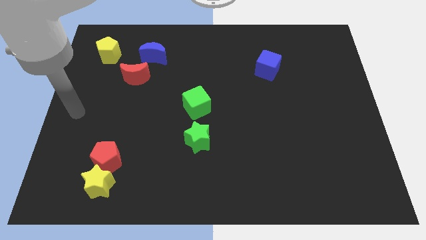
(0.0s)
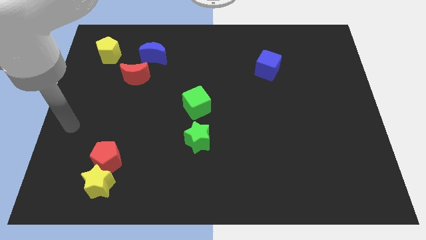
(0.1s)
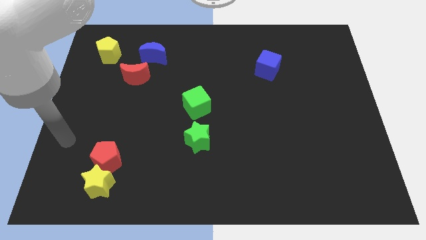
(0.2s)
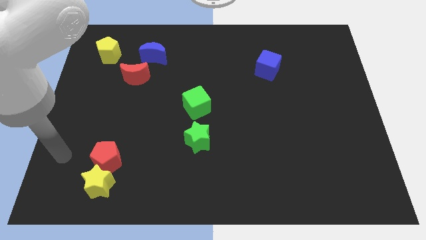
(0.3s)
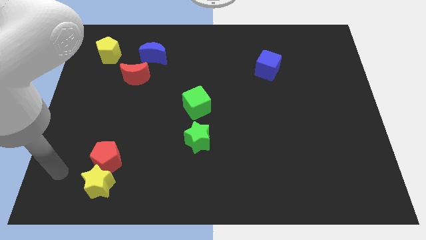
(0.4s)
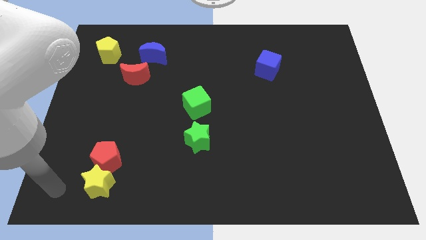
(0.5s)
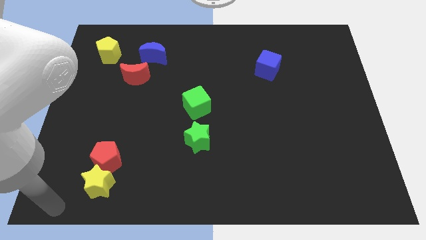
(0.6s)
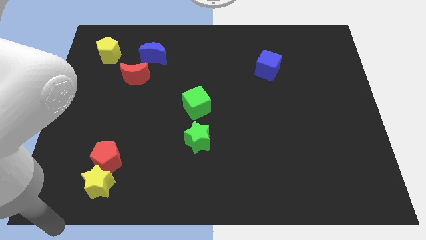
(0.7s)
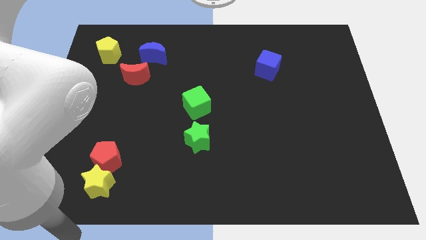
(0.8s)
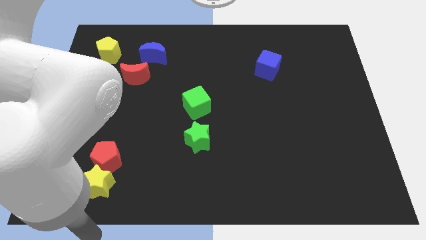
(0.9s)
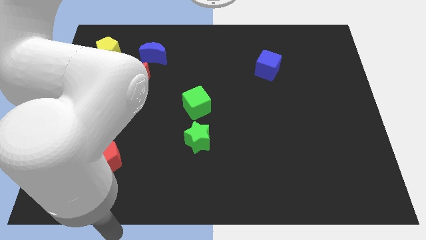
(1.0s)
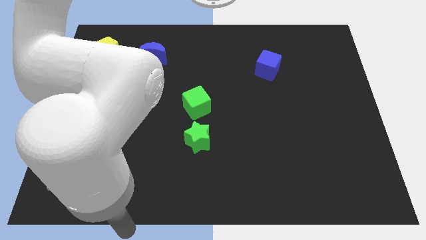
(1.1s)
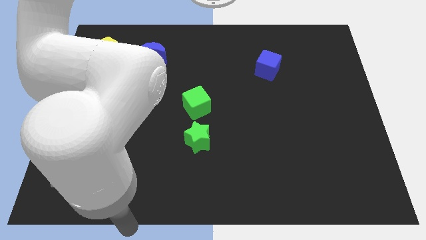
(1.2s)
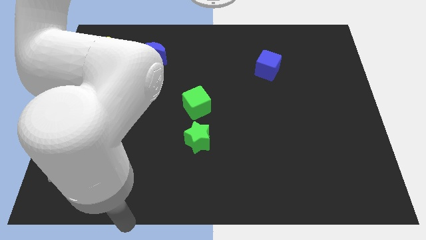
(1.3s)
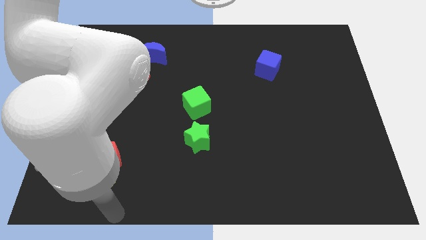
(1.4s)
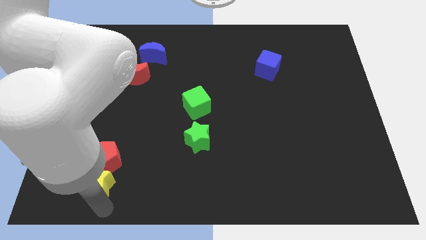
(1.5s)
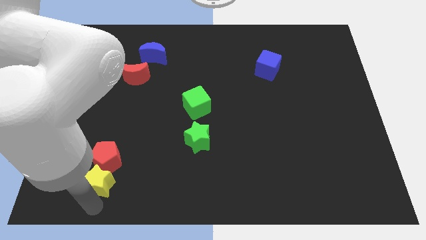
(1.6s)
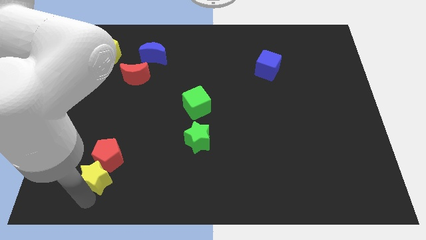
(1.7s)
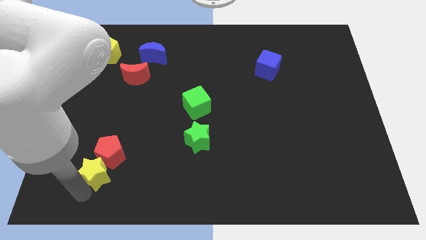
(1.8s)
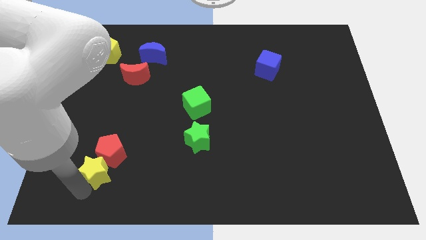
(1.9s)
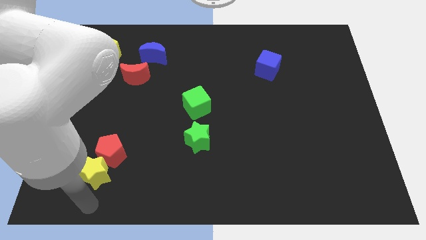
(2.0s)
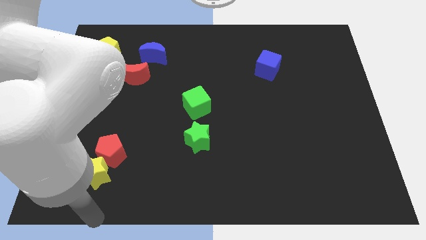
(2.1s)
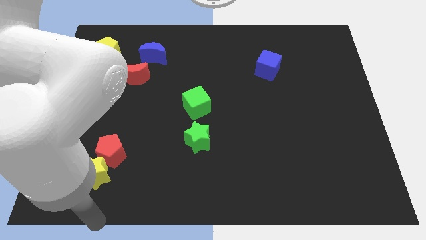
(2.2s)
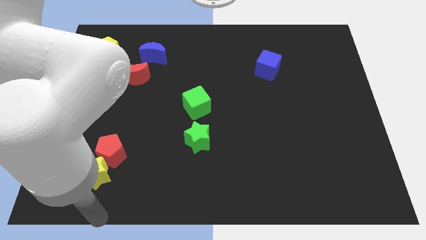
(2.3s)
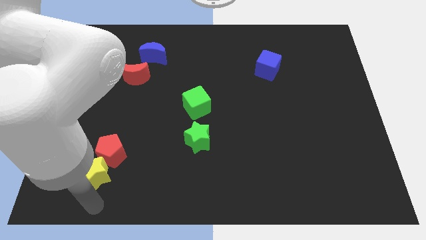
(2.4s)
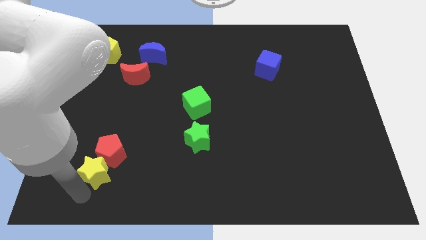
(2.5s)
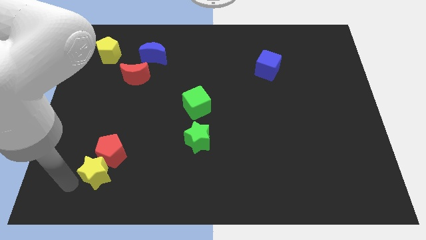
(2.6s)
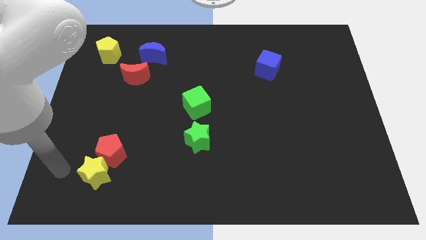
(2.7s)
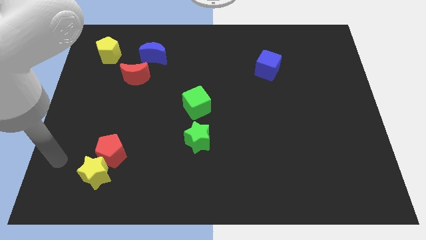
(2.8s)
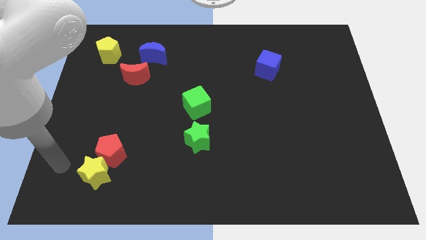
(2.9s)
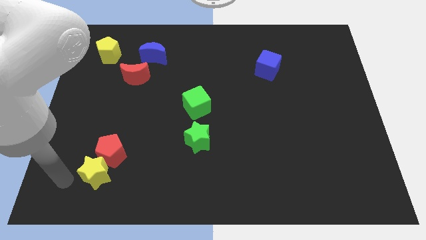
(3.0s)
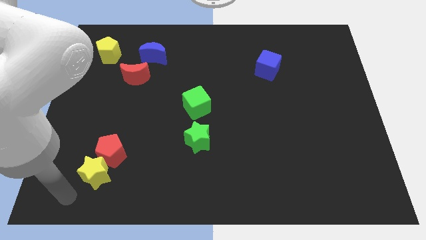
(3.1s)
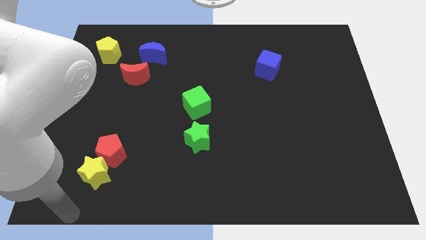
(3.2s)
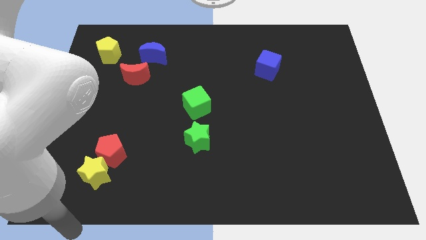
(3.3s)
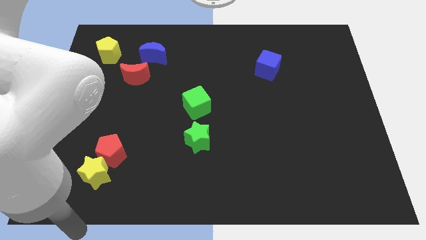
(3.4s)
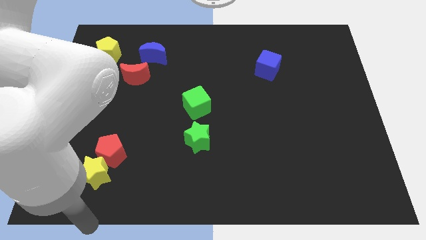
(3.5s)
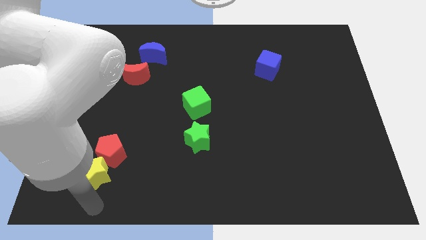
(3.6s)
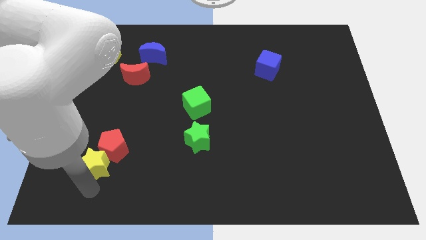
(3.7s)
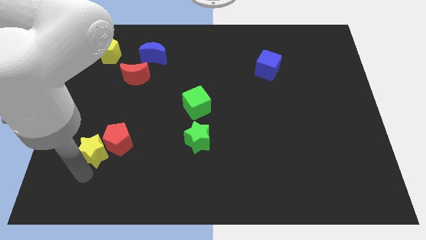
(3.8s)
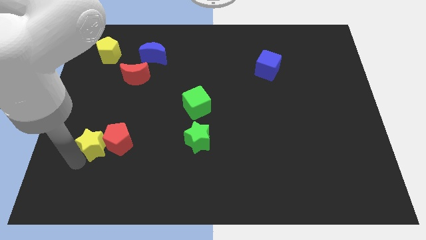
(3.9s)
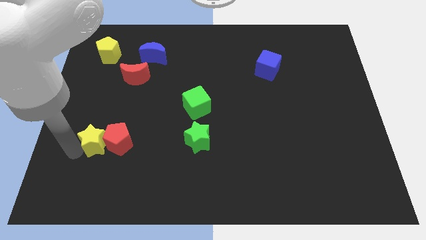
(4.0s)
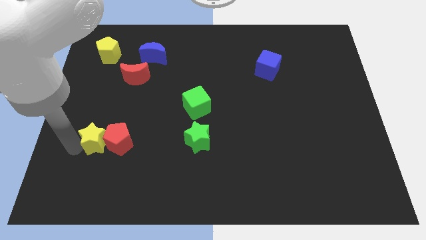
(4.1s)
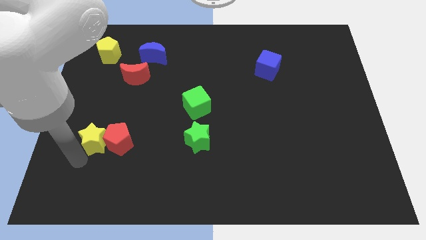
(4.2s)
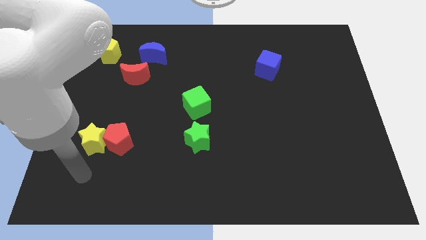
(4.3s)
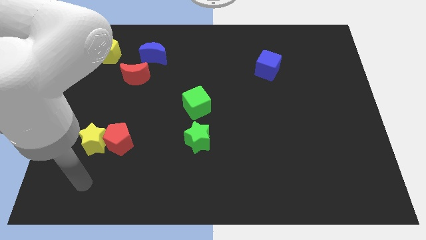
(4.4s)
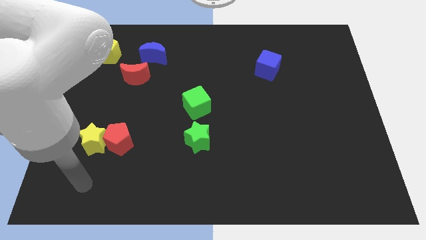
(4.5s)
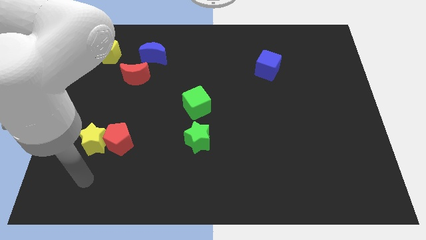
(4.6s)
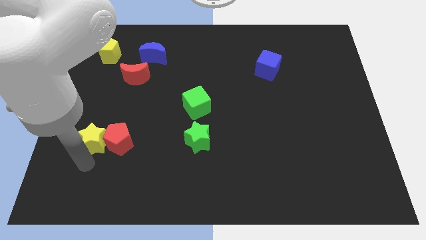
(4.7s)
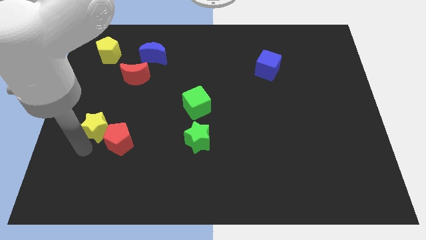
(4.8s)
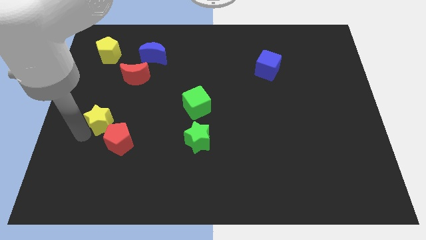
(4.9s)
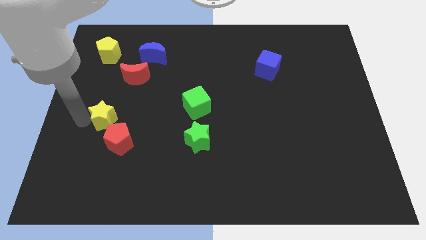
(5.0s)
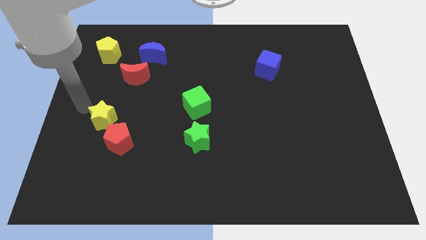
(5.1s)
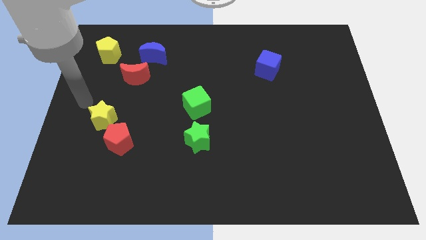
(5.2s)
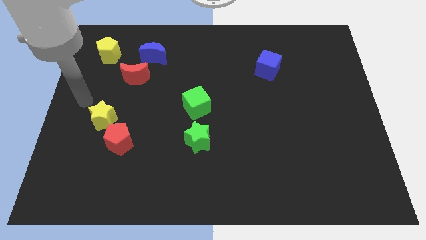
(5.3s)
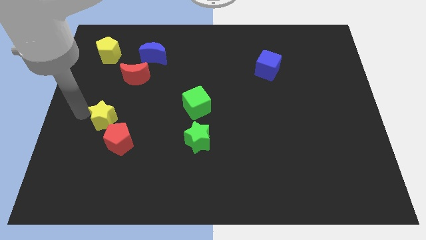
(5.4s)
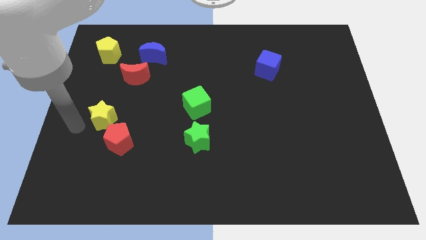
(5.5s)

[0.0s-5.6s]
place the yellow star to the top left diagonal of the red pentagon

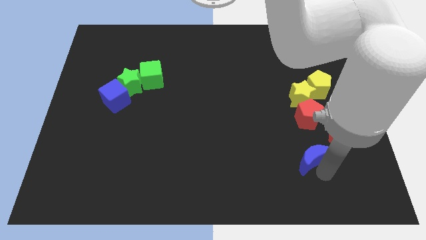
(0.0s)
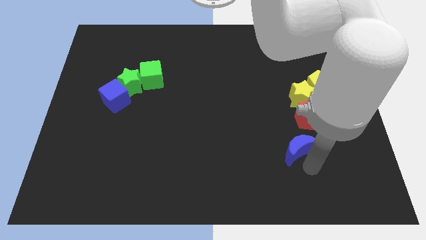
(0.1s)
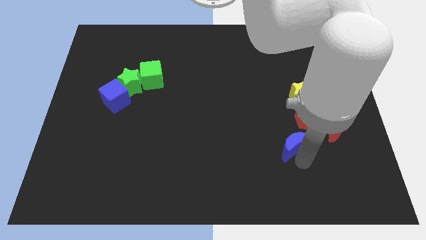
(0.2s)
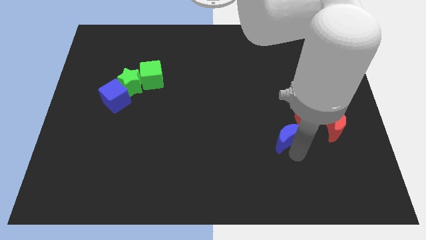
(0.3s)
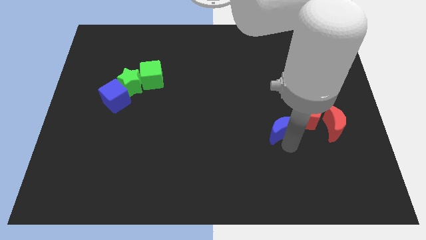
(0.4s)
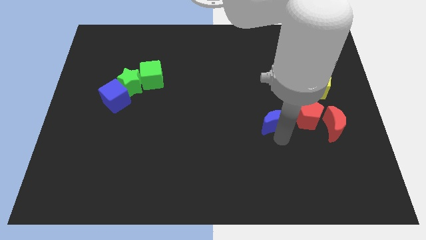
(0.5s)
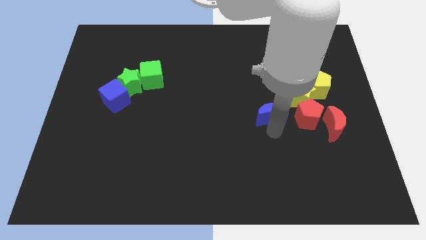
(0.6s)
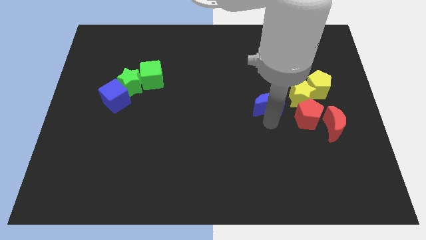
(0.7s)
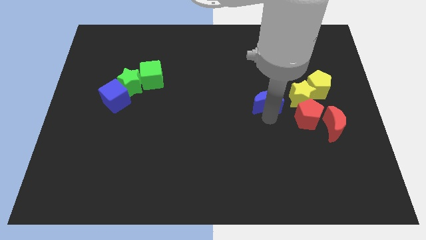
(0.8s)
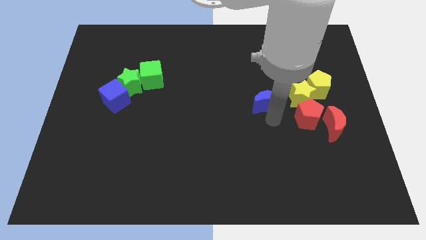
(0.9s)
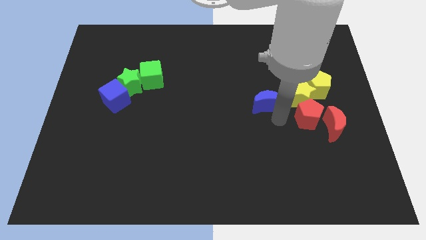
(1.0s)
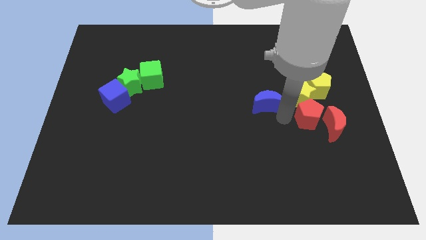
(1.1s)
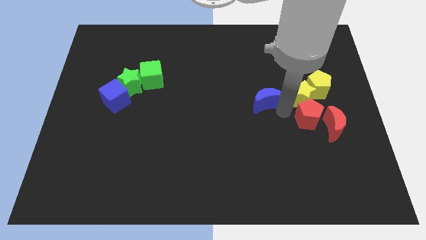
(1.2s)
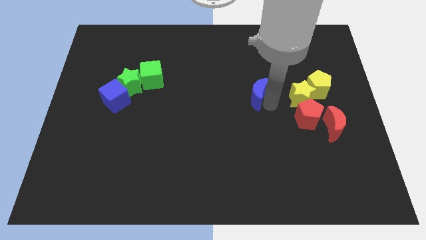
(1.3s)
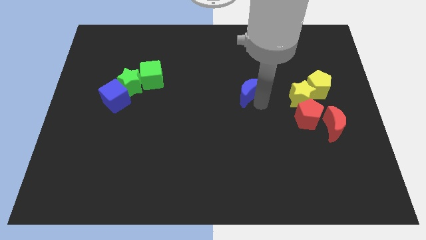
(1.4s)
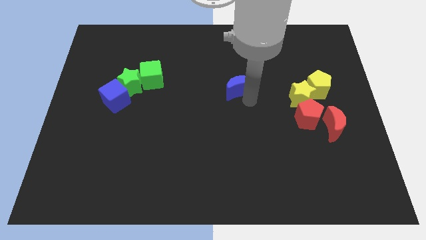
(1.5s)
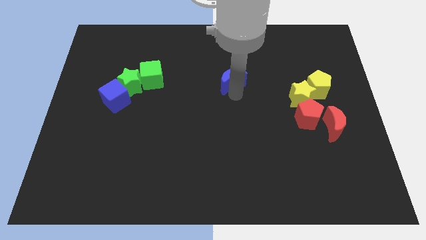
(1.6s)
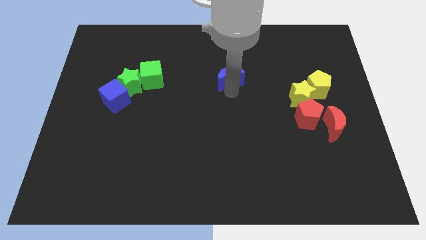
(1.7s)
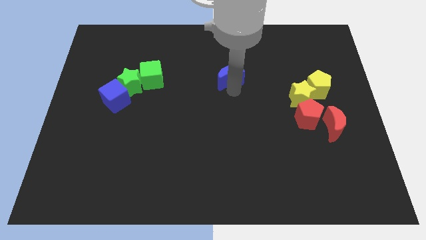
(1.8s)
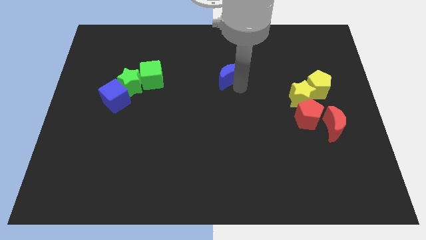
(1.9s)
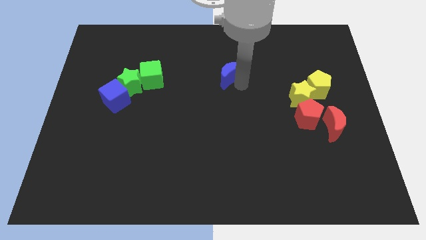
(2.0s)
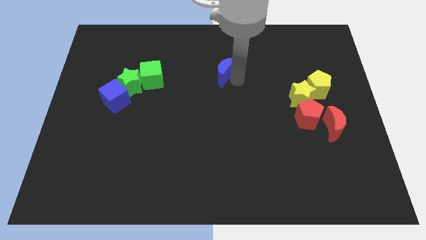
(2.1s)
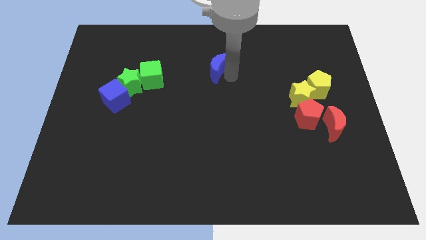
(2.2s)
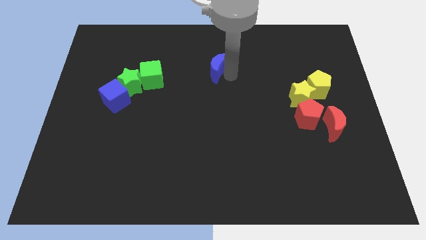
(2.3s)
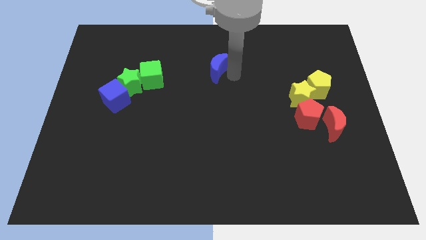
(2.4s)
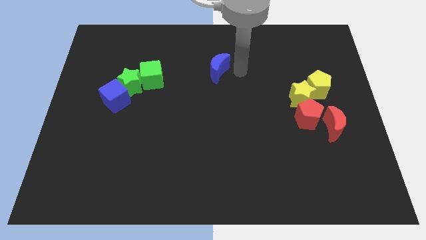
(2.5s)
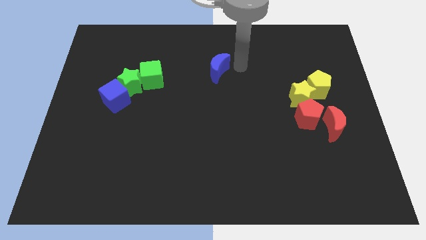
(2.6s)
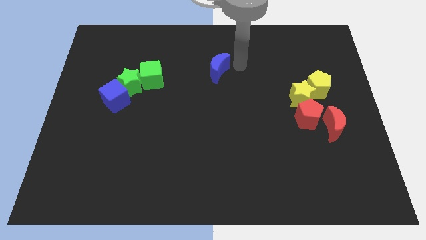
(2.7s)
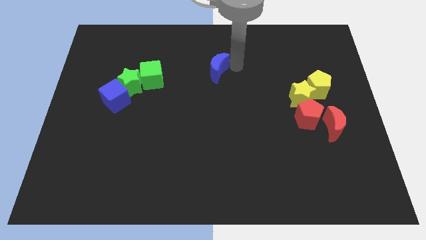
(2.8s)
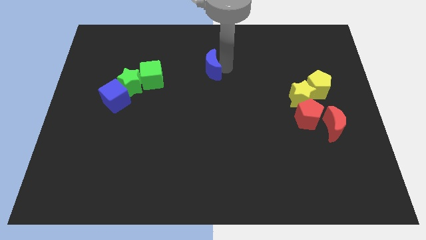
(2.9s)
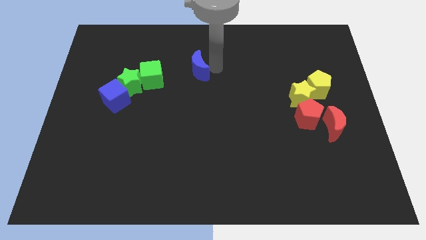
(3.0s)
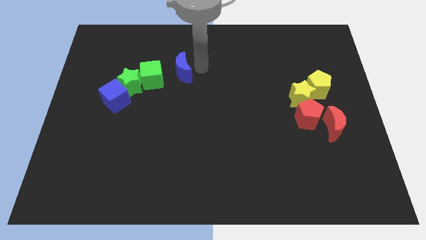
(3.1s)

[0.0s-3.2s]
push the blue crescent to the right of the green cube

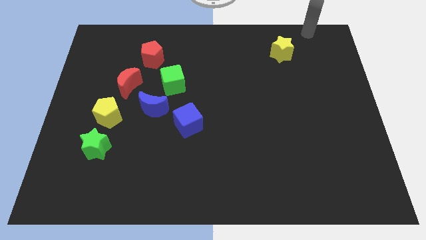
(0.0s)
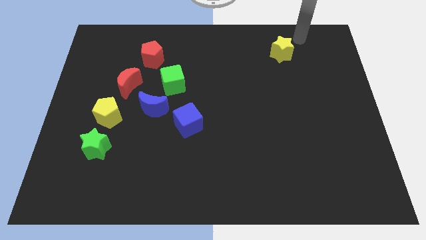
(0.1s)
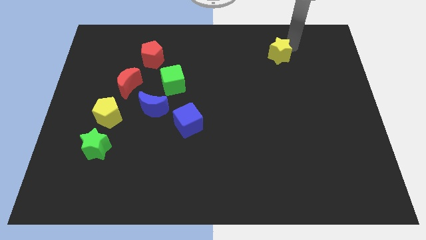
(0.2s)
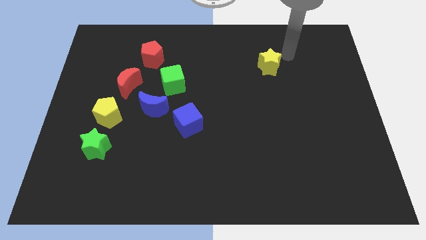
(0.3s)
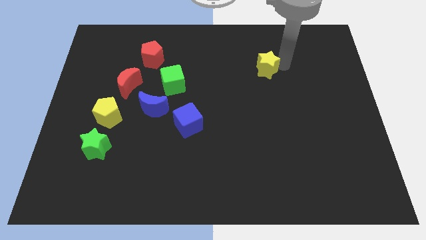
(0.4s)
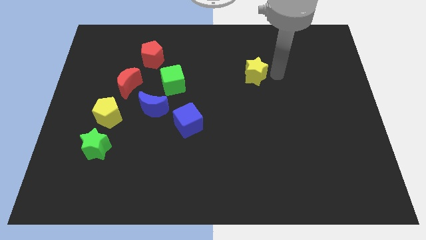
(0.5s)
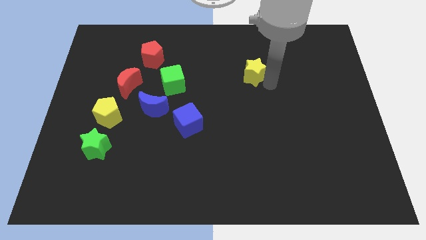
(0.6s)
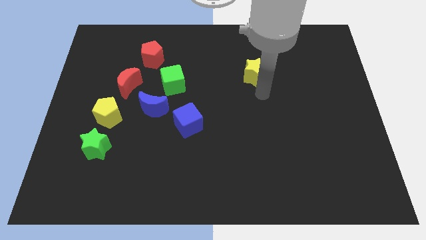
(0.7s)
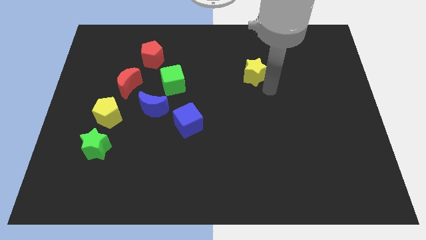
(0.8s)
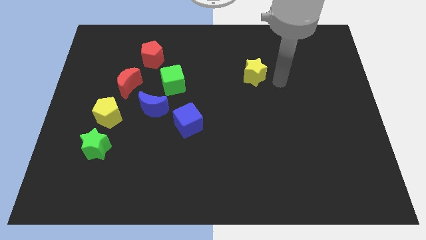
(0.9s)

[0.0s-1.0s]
push the yellow star towards the center
